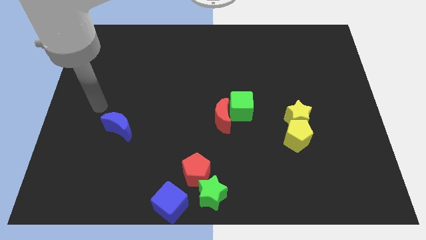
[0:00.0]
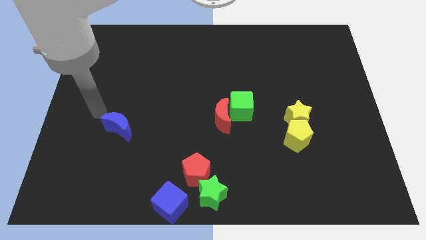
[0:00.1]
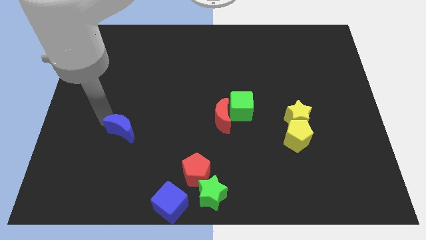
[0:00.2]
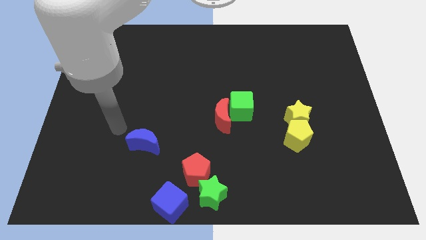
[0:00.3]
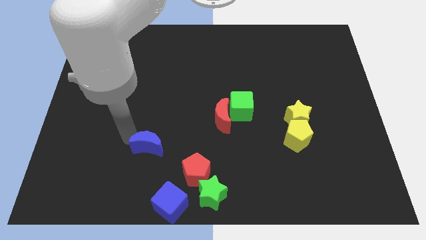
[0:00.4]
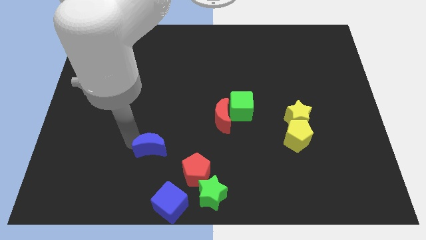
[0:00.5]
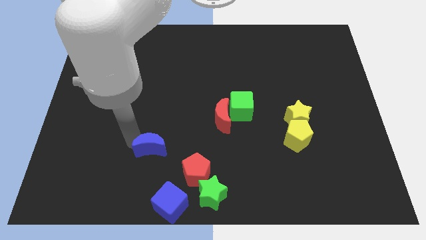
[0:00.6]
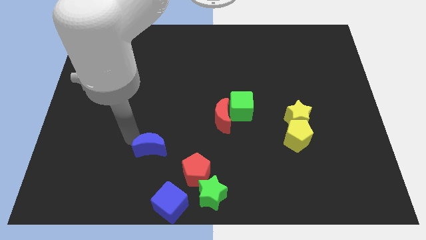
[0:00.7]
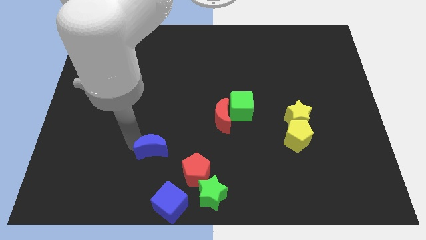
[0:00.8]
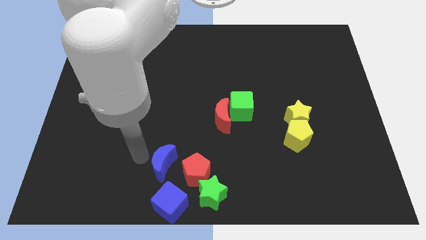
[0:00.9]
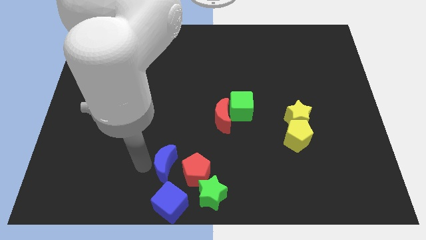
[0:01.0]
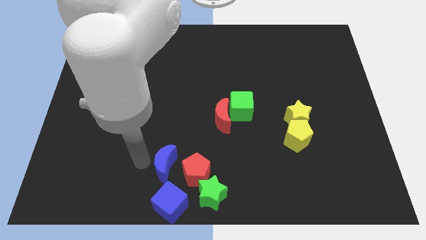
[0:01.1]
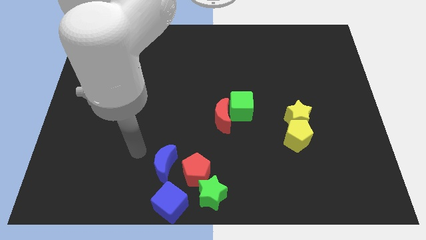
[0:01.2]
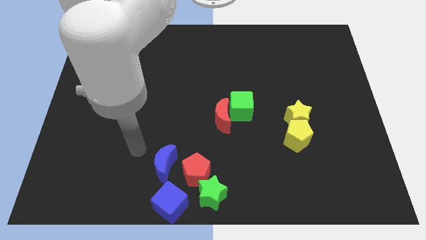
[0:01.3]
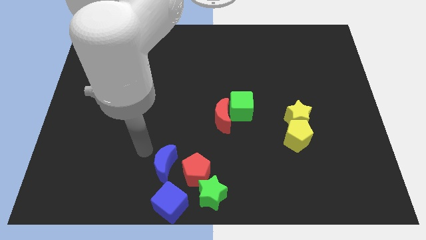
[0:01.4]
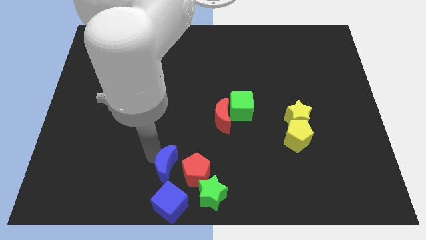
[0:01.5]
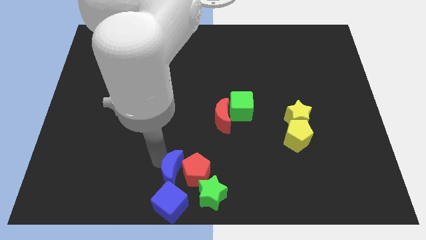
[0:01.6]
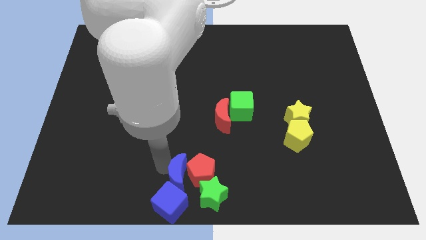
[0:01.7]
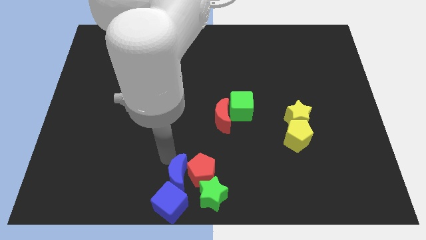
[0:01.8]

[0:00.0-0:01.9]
move the blue moon to the left of the red pentagon

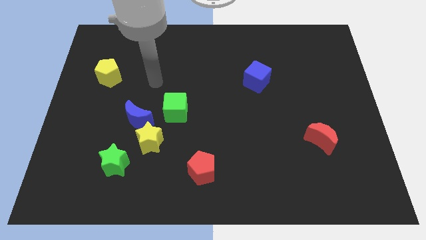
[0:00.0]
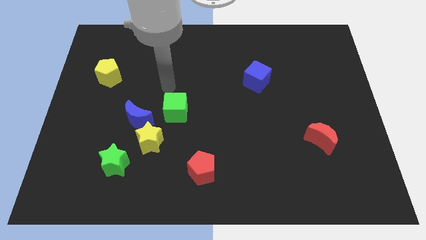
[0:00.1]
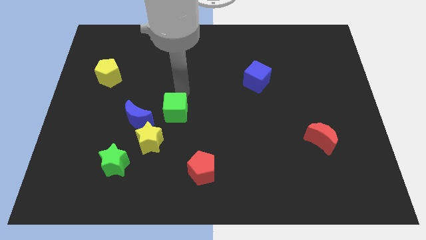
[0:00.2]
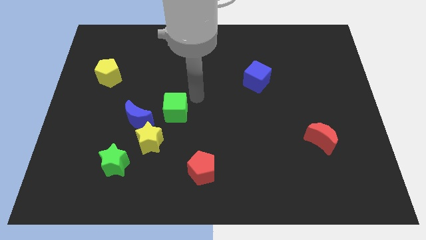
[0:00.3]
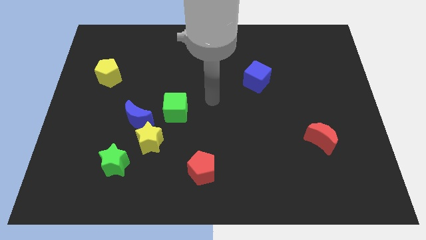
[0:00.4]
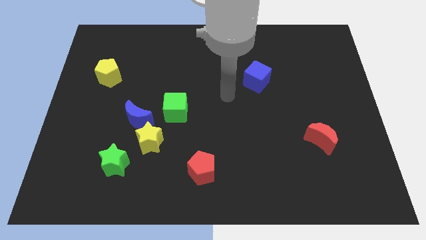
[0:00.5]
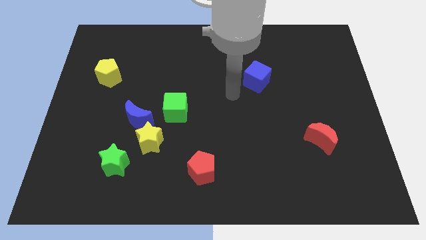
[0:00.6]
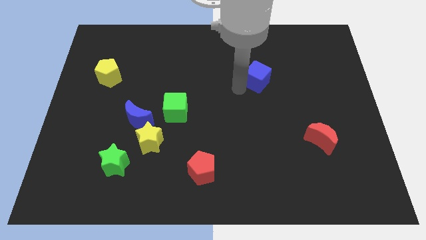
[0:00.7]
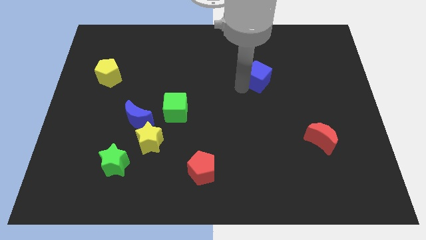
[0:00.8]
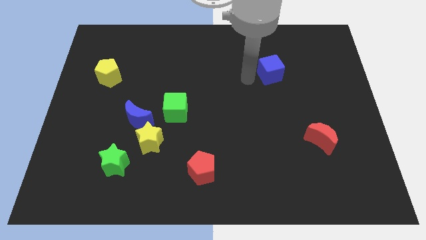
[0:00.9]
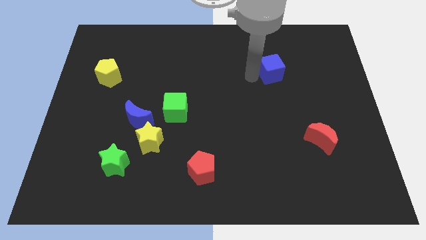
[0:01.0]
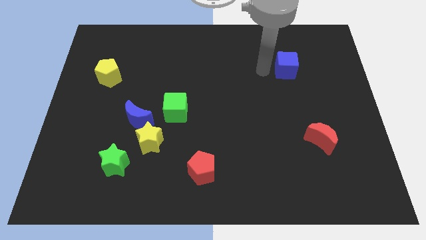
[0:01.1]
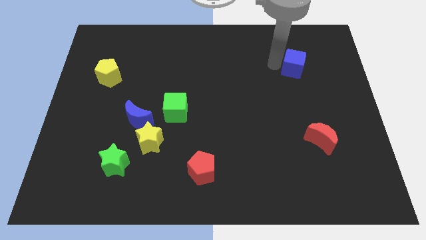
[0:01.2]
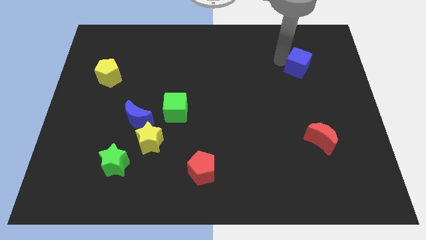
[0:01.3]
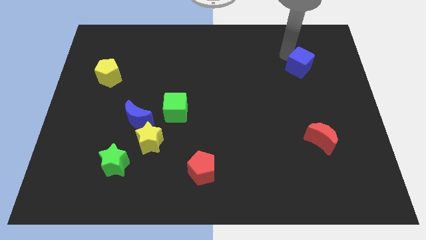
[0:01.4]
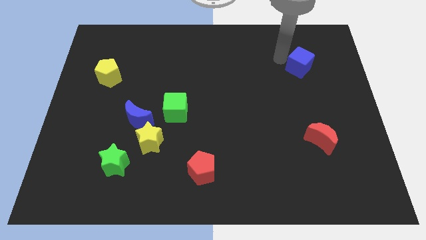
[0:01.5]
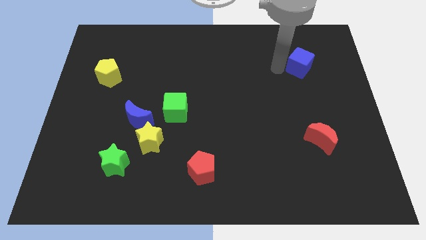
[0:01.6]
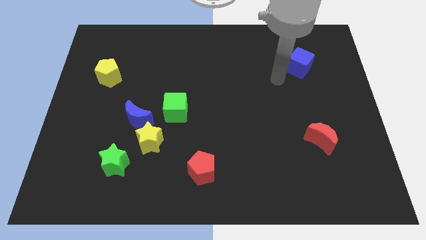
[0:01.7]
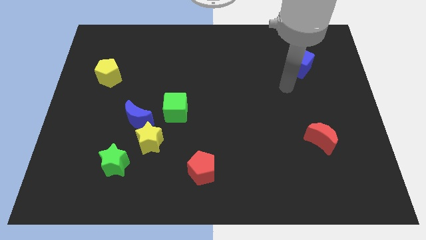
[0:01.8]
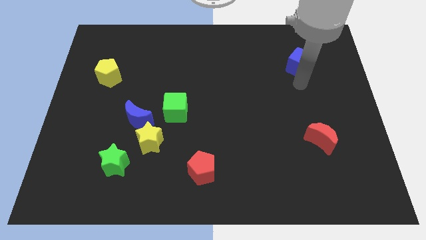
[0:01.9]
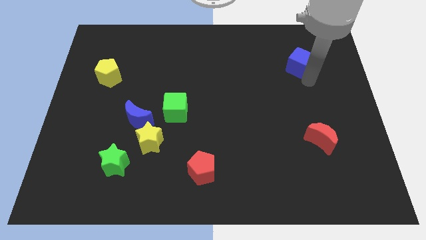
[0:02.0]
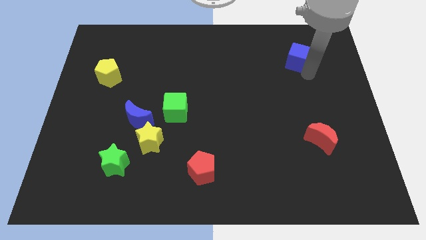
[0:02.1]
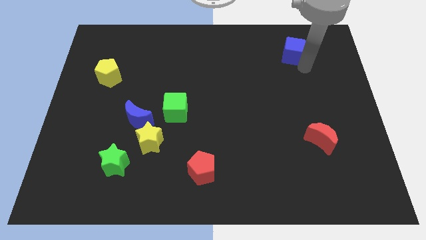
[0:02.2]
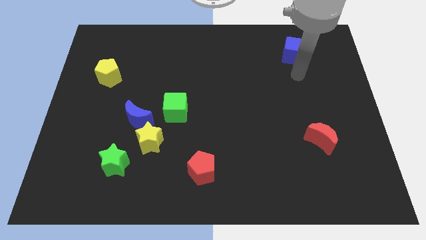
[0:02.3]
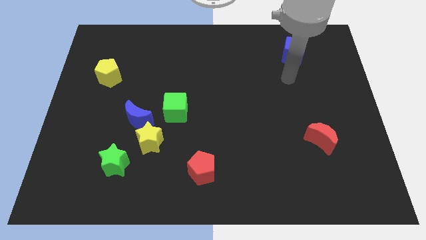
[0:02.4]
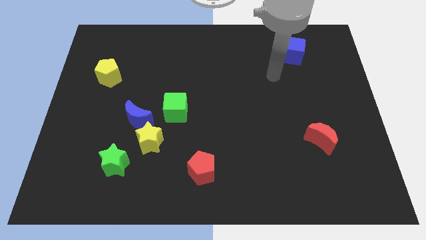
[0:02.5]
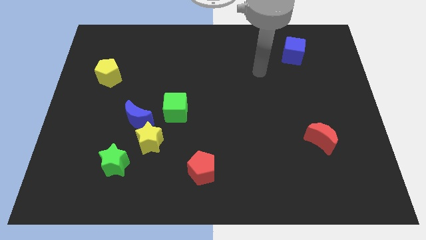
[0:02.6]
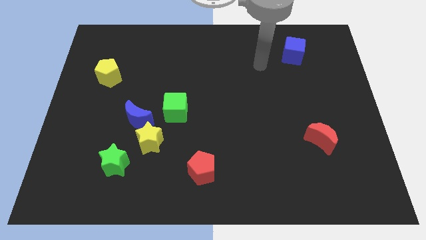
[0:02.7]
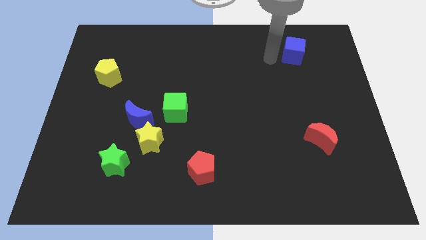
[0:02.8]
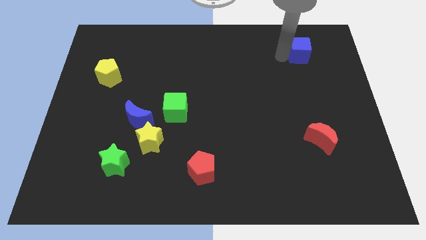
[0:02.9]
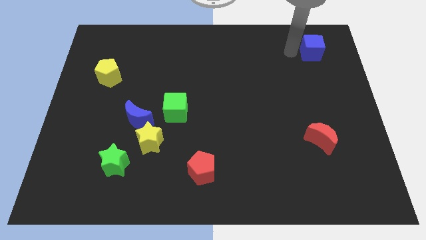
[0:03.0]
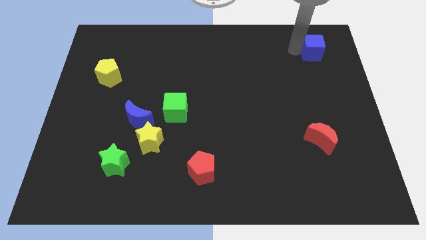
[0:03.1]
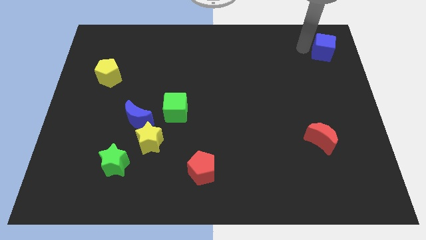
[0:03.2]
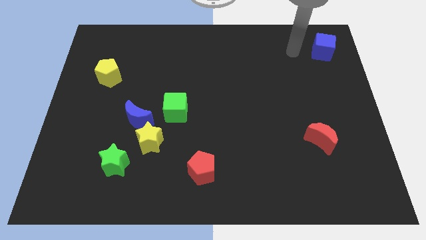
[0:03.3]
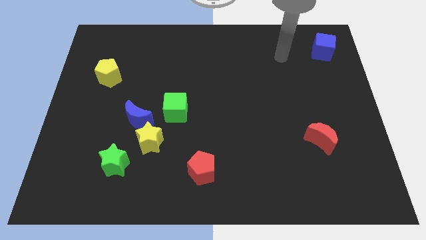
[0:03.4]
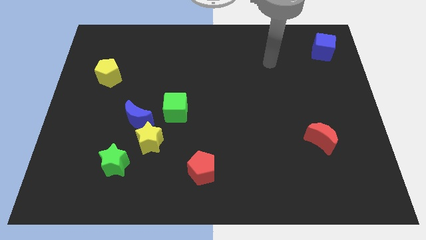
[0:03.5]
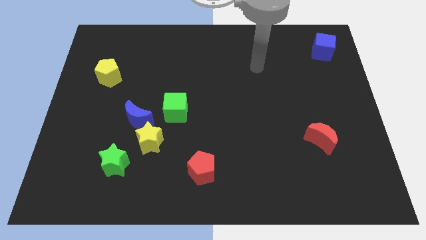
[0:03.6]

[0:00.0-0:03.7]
move the blue cube to the top right of the board

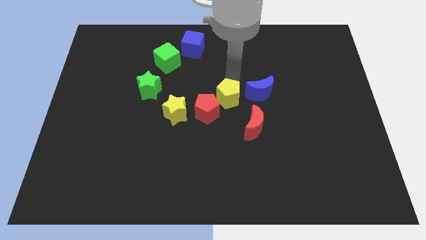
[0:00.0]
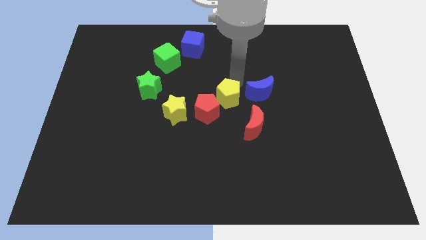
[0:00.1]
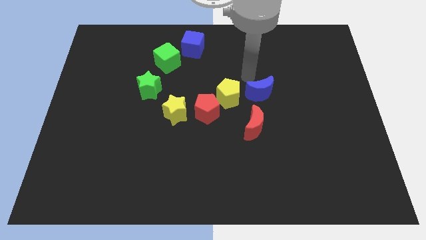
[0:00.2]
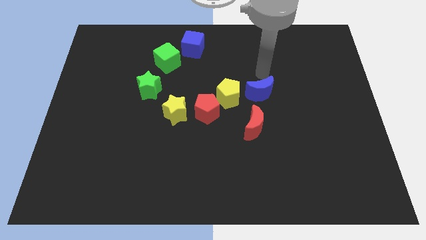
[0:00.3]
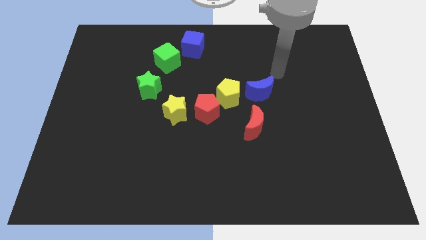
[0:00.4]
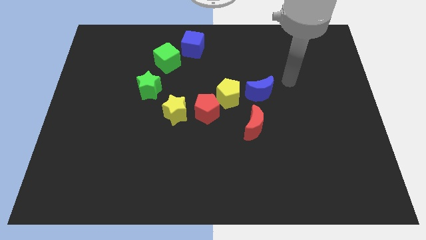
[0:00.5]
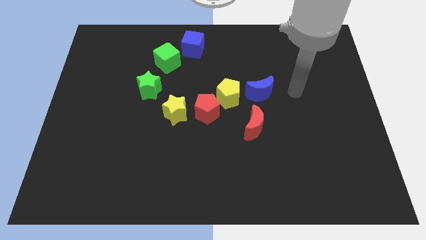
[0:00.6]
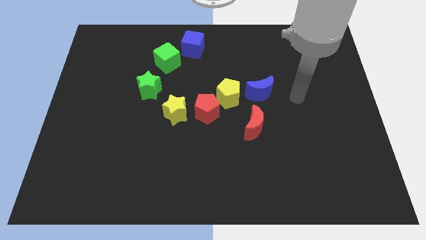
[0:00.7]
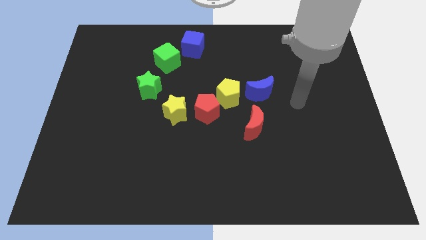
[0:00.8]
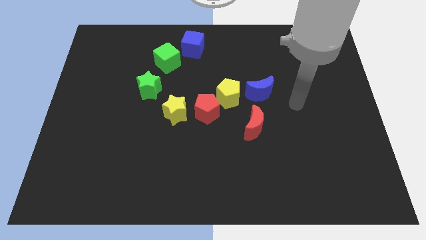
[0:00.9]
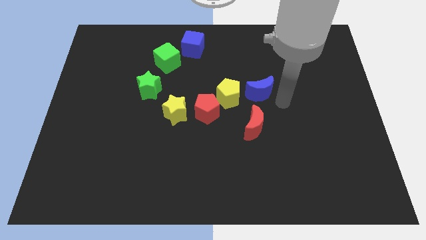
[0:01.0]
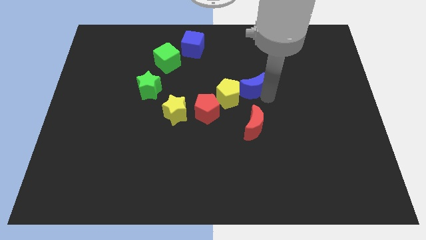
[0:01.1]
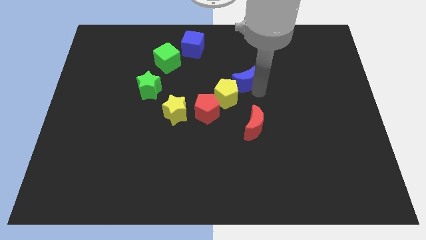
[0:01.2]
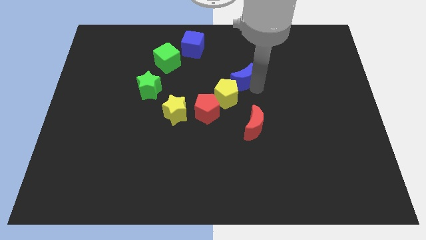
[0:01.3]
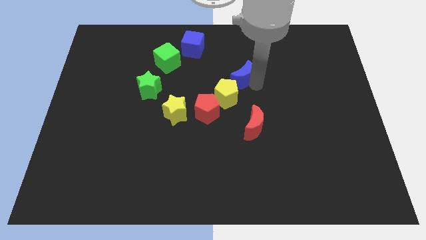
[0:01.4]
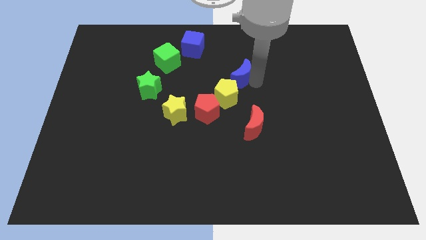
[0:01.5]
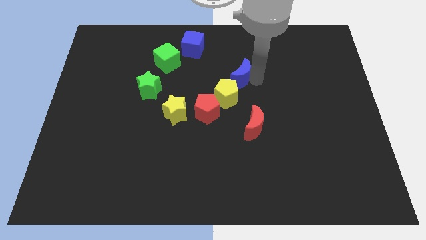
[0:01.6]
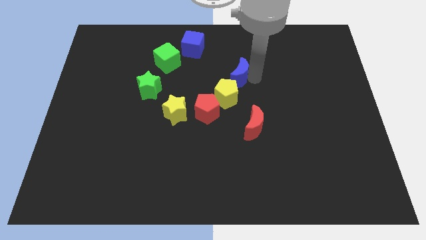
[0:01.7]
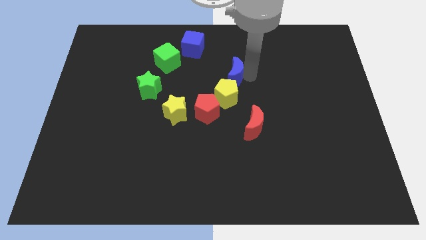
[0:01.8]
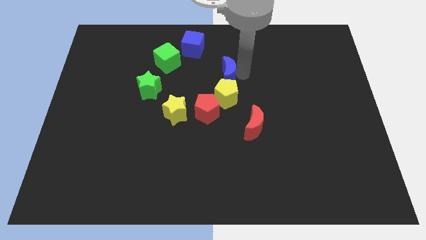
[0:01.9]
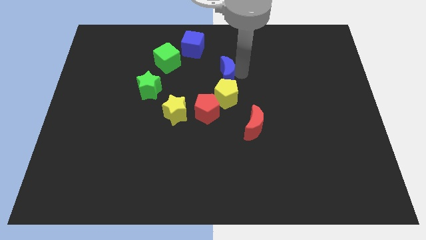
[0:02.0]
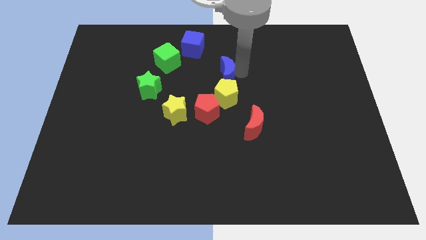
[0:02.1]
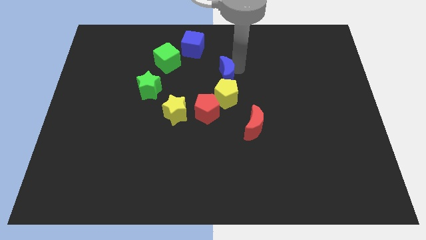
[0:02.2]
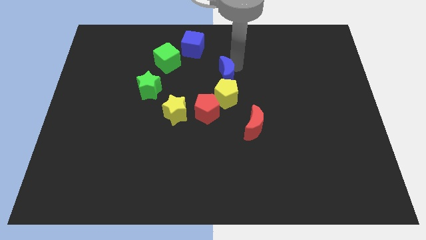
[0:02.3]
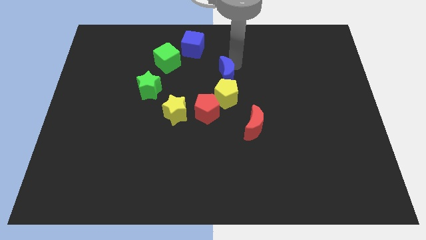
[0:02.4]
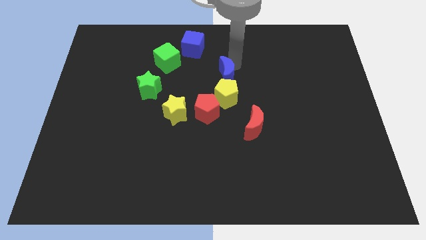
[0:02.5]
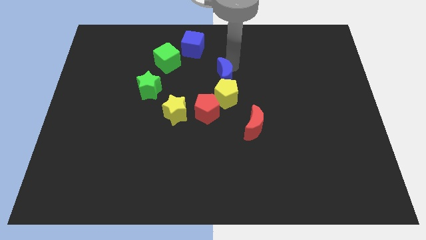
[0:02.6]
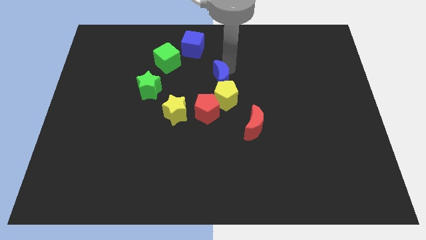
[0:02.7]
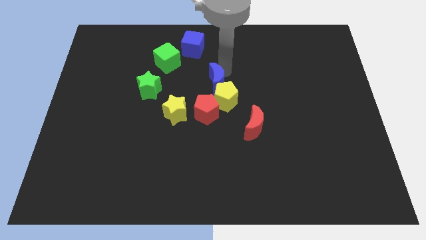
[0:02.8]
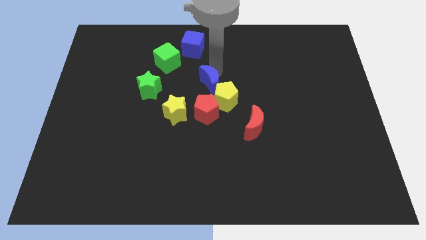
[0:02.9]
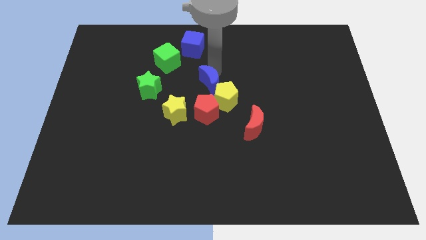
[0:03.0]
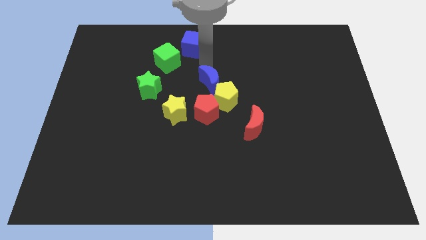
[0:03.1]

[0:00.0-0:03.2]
slide blue crescent towards the upper left of the yellow pentagon
